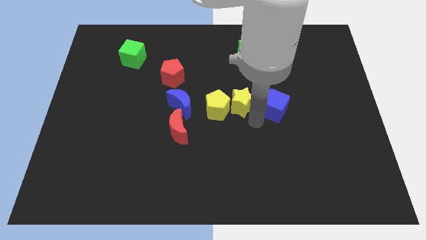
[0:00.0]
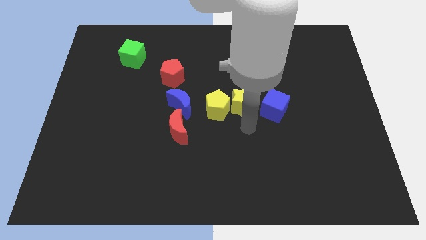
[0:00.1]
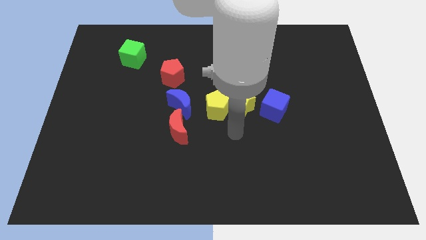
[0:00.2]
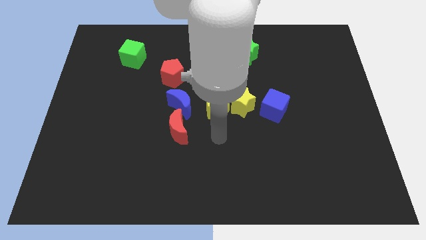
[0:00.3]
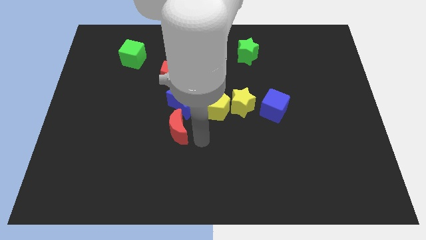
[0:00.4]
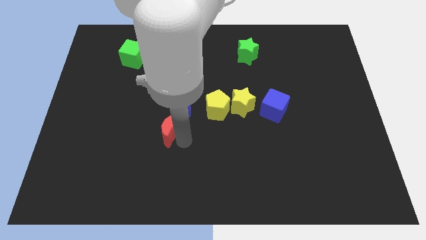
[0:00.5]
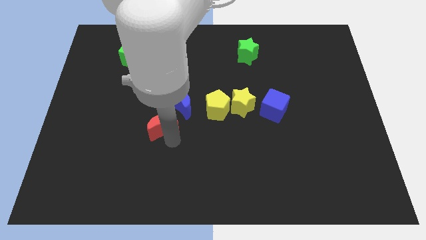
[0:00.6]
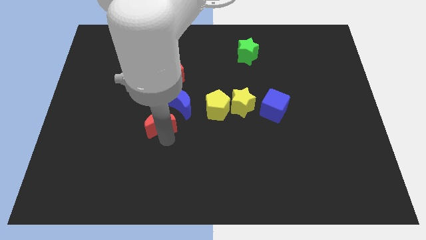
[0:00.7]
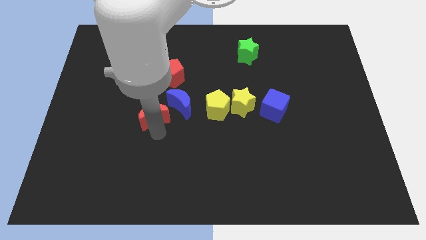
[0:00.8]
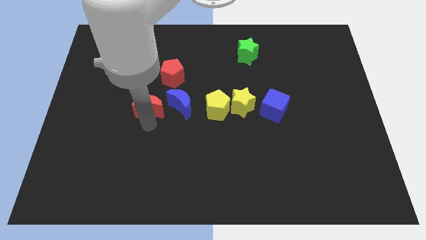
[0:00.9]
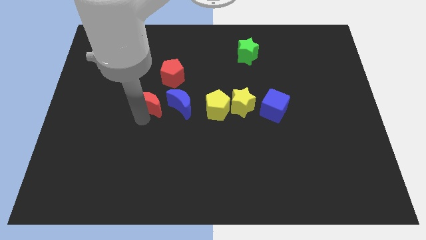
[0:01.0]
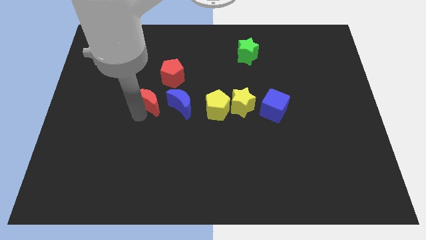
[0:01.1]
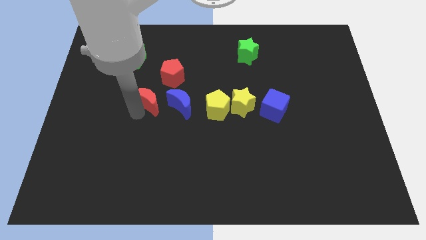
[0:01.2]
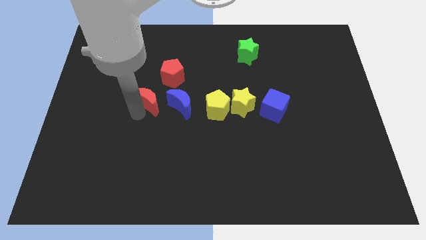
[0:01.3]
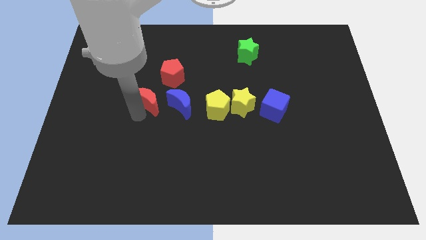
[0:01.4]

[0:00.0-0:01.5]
push the red moon parallel to the blue moon

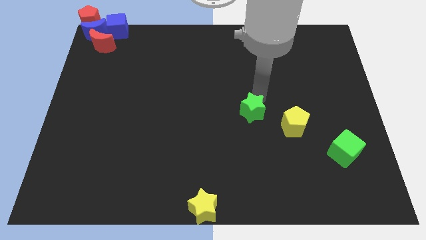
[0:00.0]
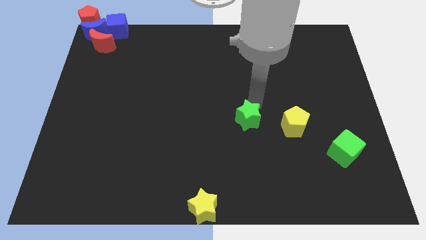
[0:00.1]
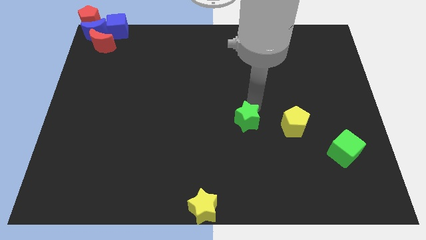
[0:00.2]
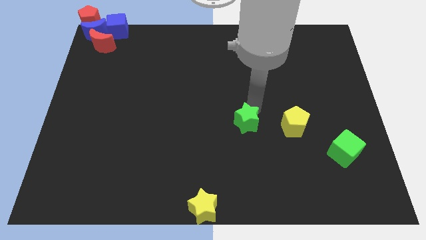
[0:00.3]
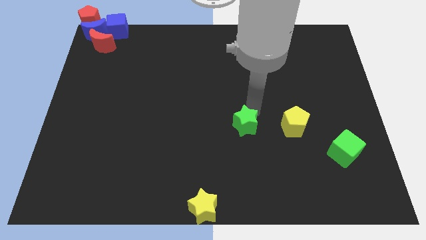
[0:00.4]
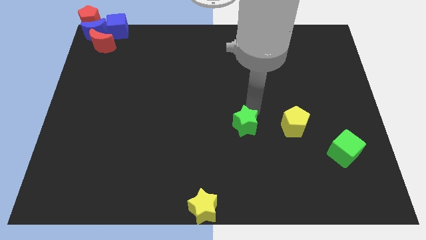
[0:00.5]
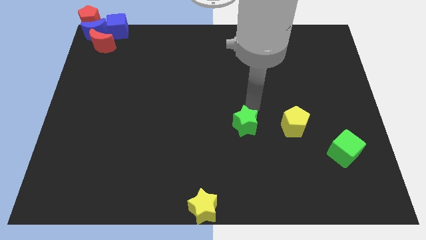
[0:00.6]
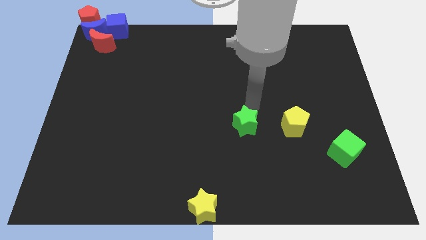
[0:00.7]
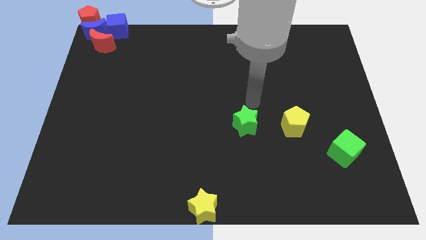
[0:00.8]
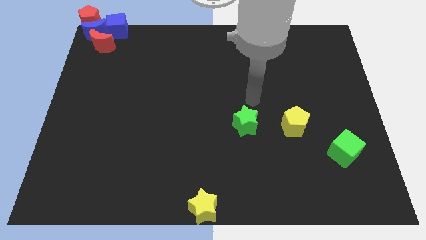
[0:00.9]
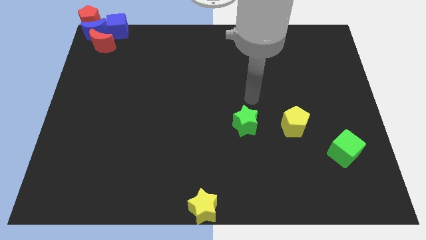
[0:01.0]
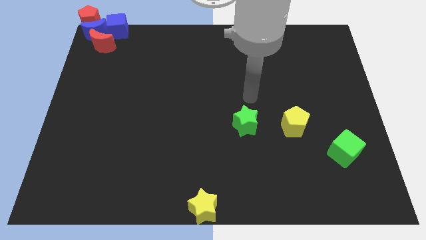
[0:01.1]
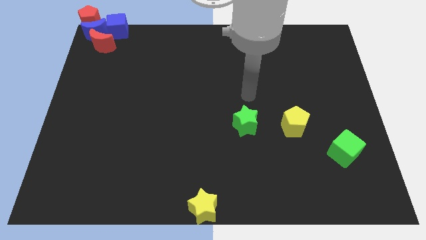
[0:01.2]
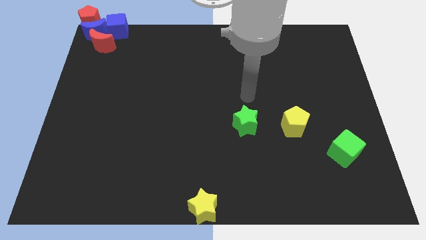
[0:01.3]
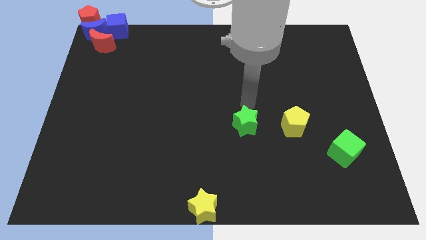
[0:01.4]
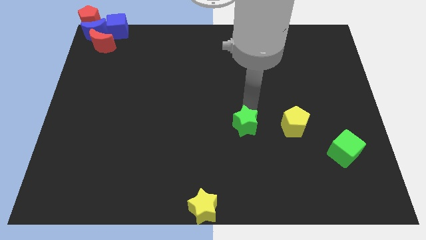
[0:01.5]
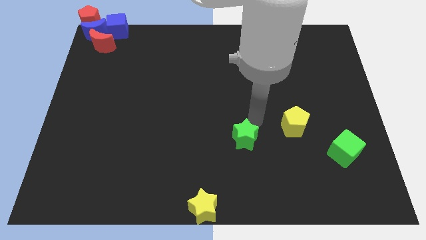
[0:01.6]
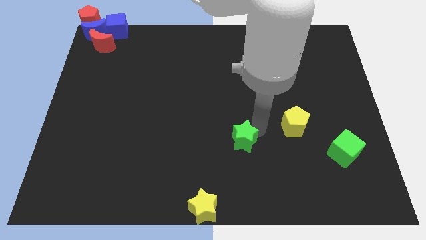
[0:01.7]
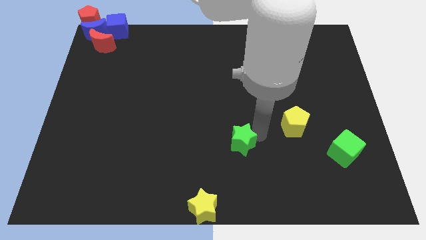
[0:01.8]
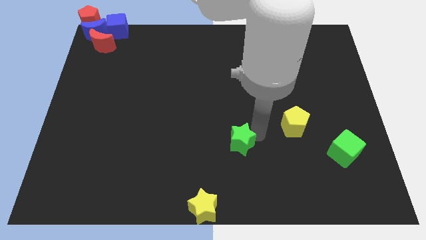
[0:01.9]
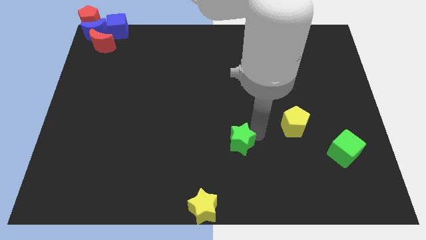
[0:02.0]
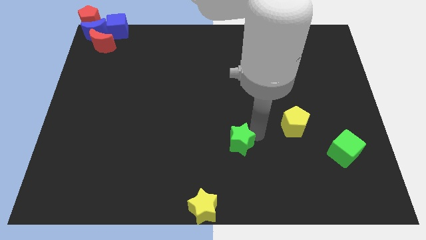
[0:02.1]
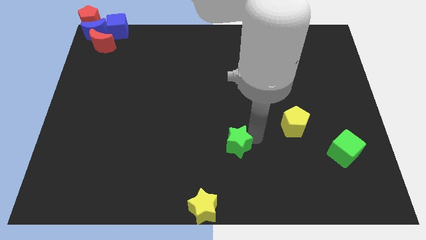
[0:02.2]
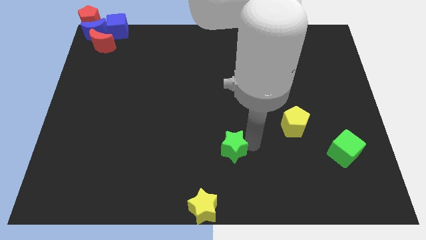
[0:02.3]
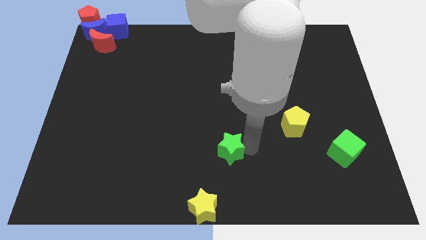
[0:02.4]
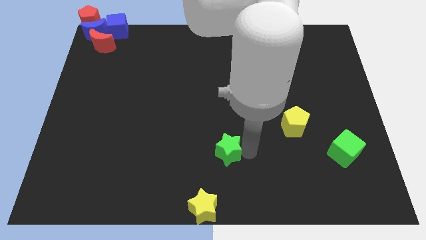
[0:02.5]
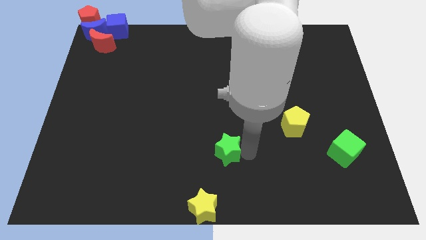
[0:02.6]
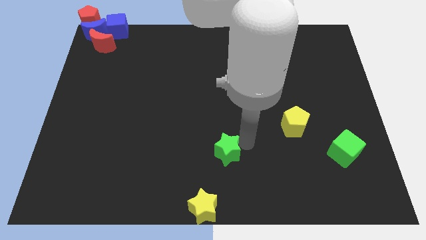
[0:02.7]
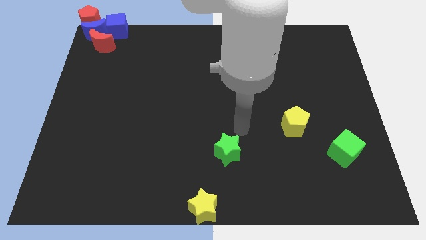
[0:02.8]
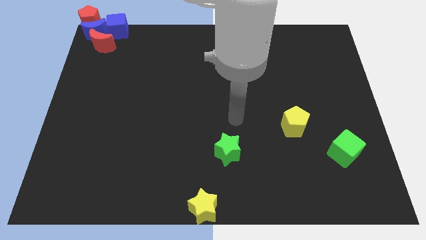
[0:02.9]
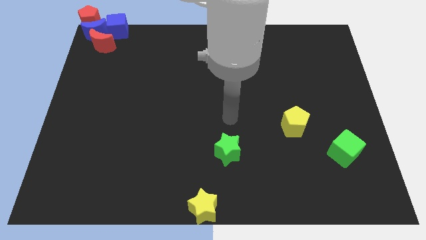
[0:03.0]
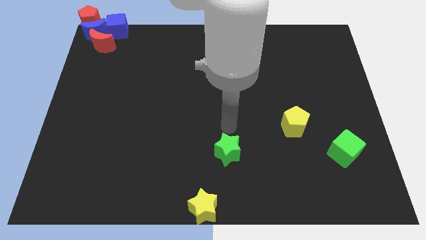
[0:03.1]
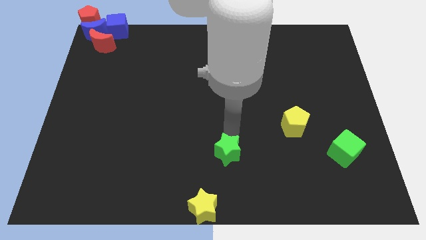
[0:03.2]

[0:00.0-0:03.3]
push green star towards bottom center

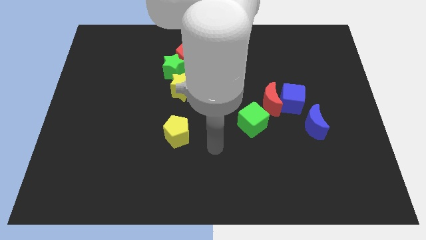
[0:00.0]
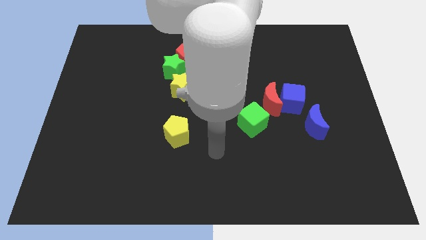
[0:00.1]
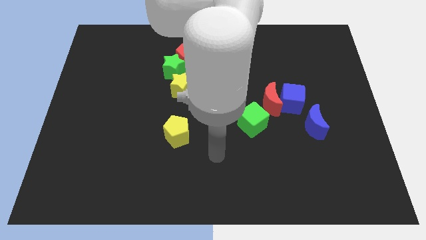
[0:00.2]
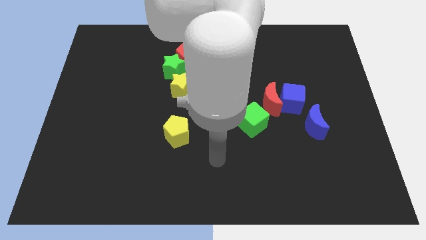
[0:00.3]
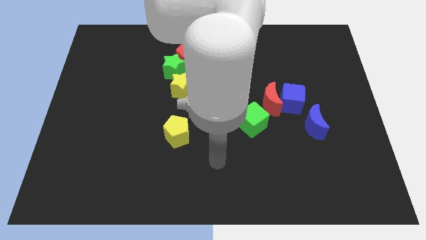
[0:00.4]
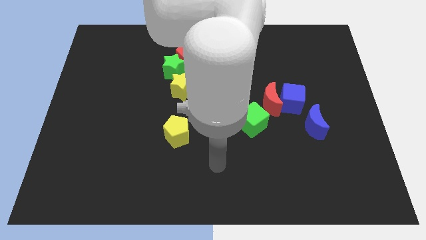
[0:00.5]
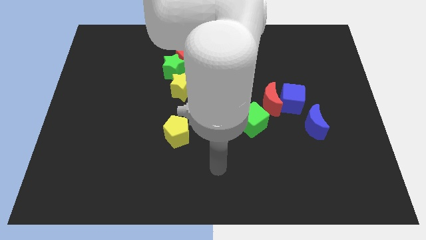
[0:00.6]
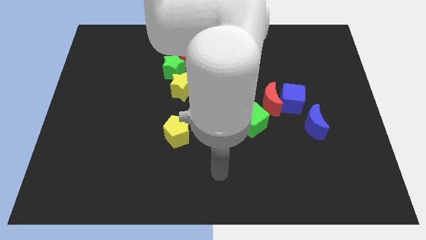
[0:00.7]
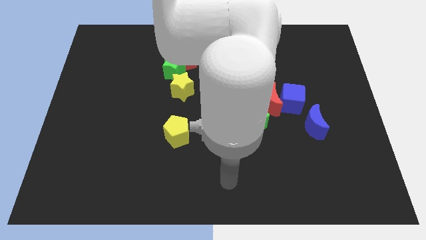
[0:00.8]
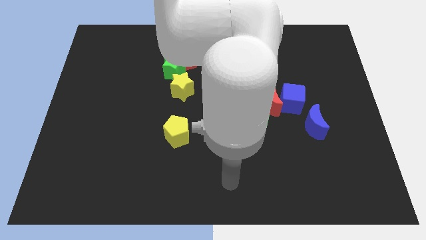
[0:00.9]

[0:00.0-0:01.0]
push the arm to the bottom

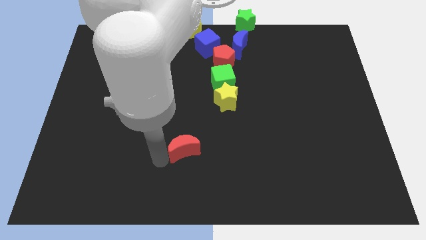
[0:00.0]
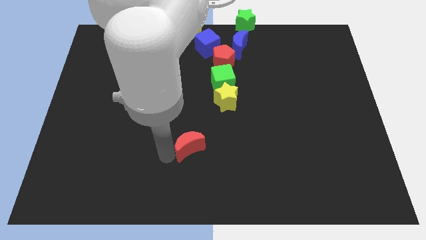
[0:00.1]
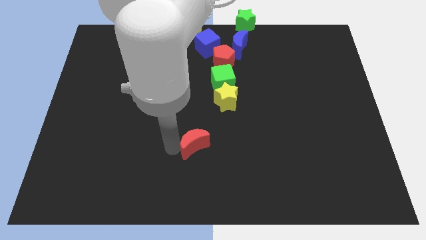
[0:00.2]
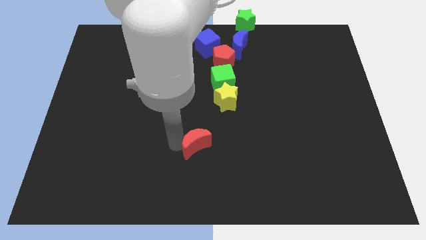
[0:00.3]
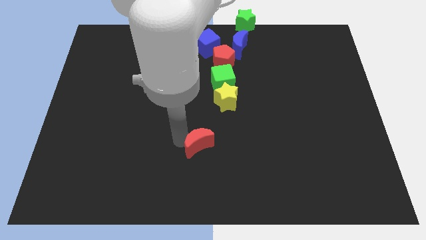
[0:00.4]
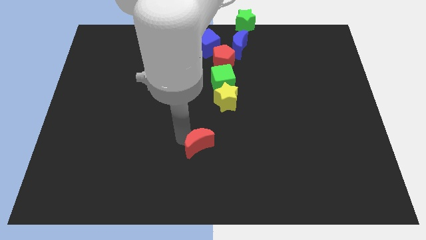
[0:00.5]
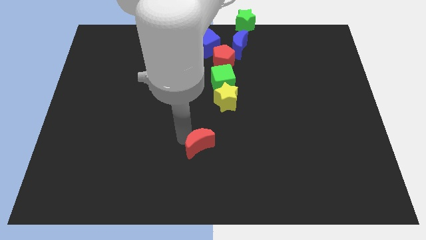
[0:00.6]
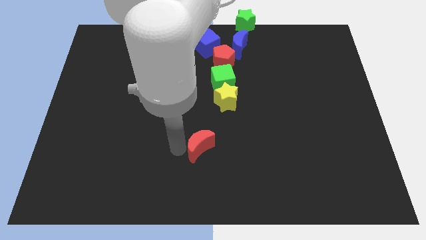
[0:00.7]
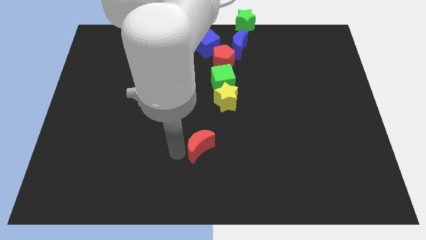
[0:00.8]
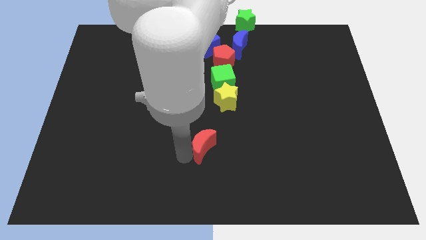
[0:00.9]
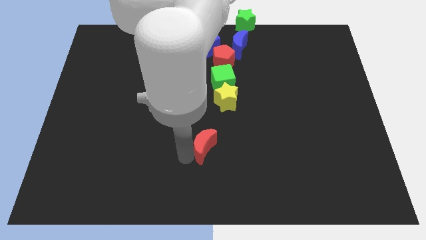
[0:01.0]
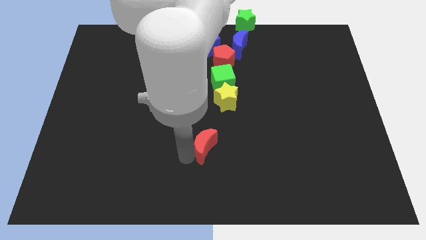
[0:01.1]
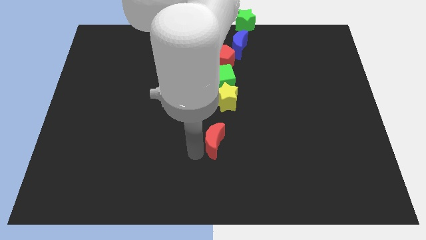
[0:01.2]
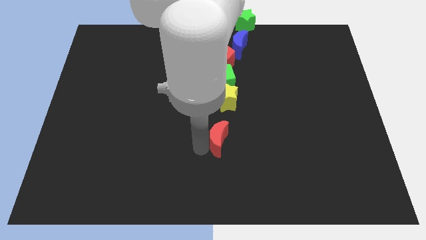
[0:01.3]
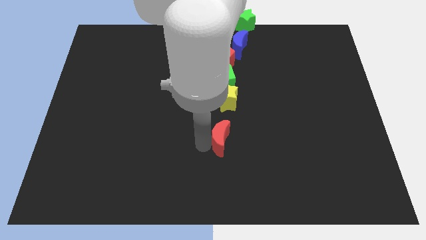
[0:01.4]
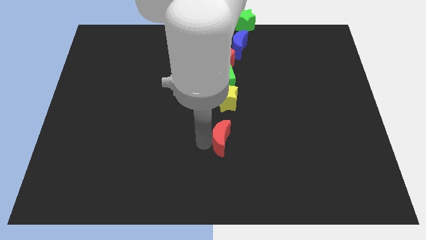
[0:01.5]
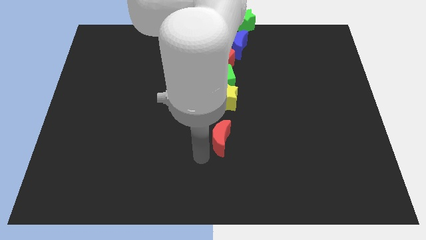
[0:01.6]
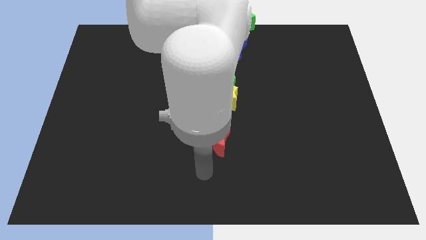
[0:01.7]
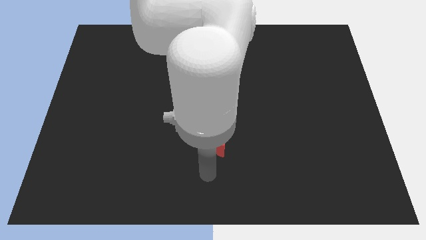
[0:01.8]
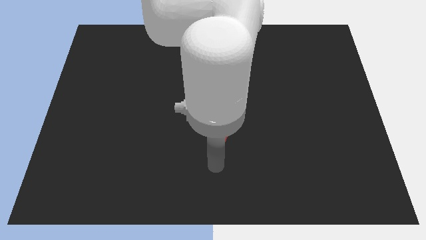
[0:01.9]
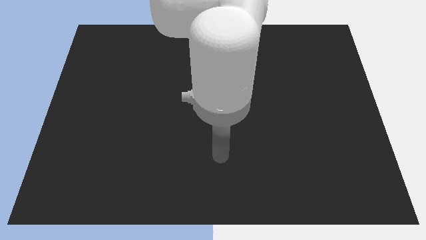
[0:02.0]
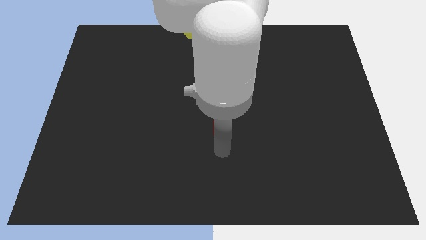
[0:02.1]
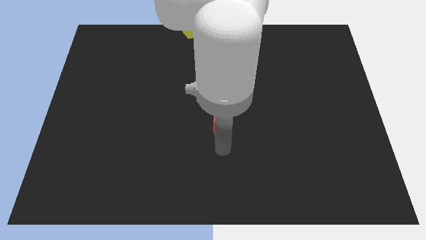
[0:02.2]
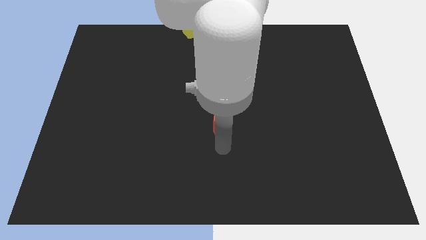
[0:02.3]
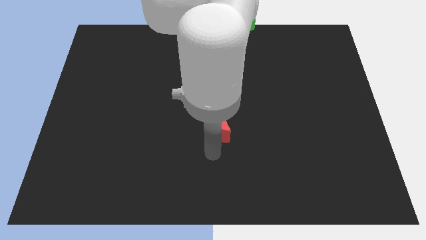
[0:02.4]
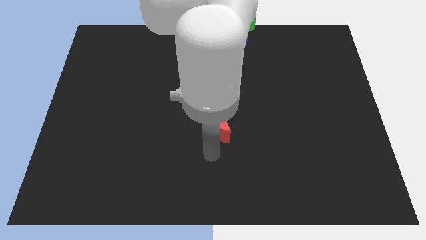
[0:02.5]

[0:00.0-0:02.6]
place red crescent near yellow star

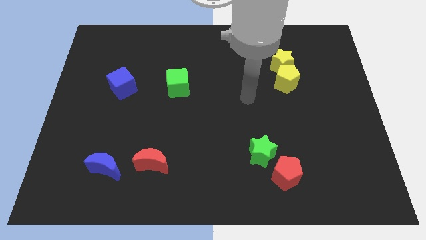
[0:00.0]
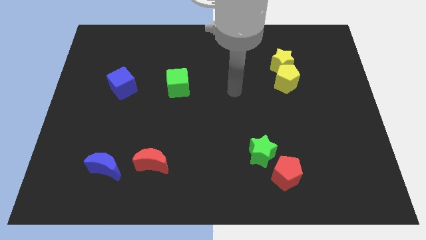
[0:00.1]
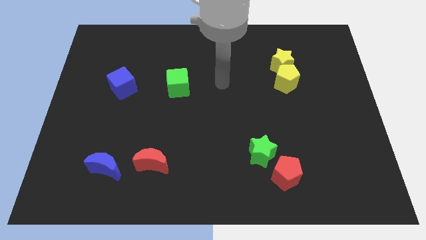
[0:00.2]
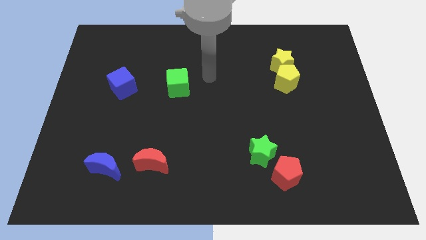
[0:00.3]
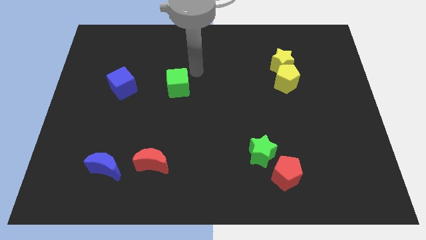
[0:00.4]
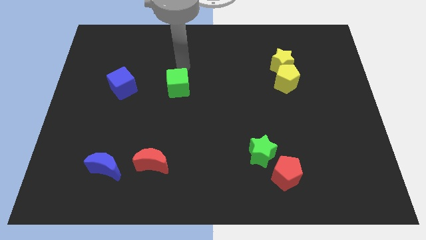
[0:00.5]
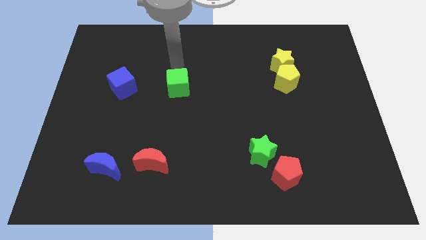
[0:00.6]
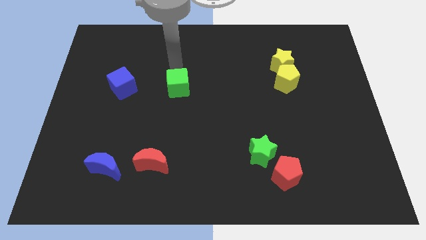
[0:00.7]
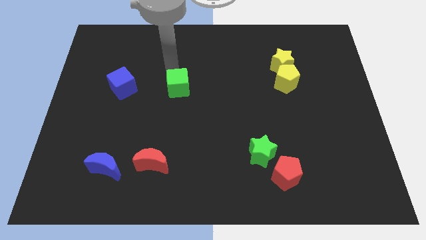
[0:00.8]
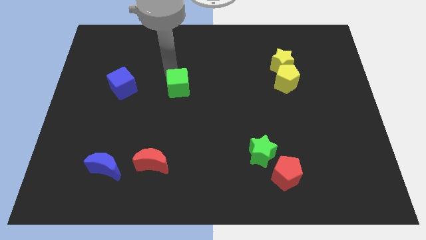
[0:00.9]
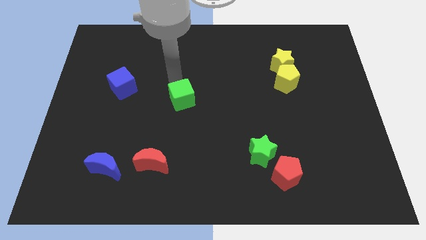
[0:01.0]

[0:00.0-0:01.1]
slide green cube slightly towards the center
